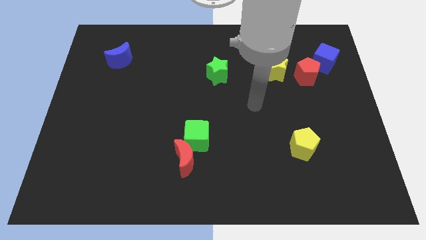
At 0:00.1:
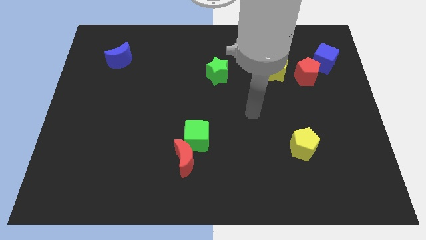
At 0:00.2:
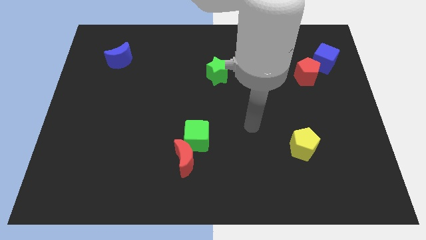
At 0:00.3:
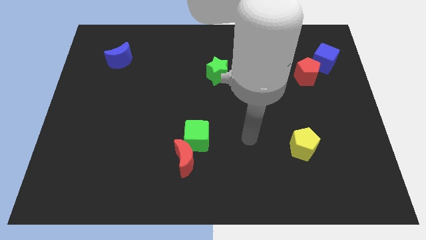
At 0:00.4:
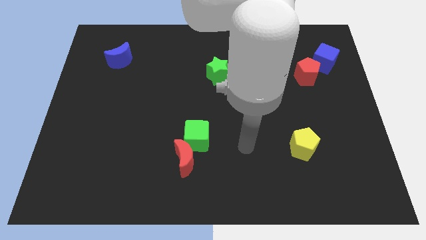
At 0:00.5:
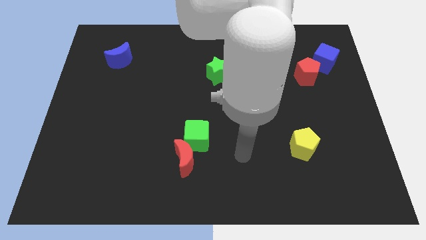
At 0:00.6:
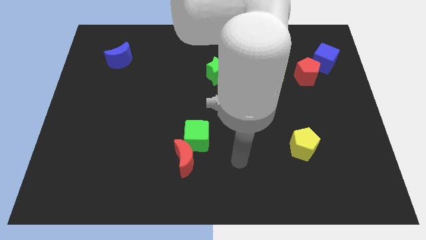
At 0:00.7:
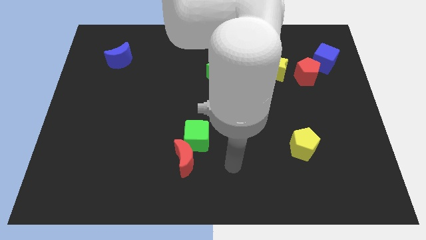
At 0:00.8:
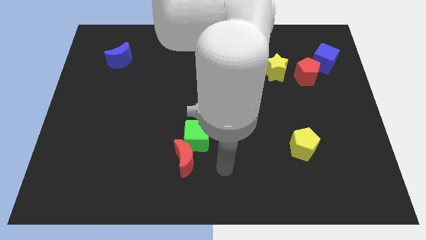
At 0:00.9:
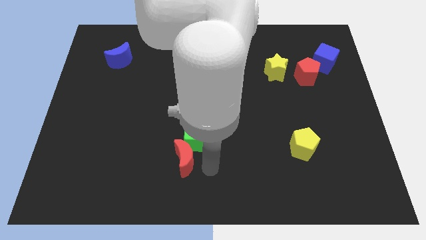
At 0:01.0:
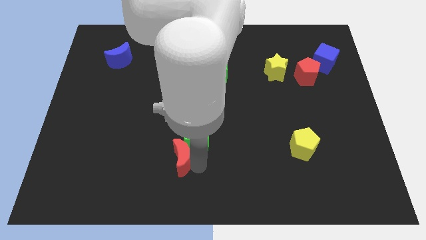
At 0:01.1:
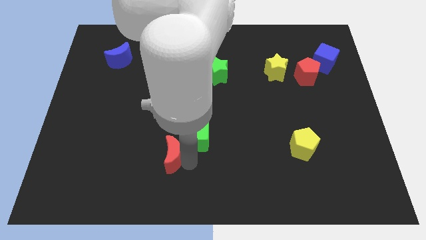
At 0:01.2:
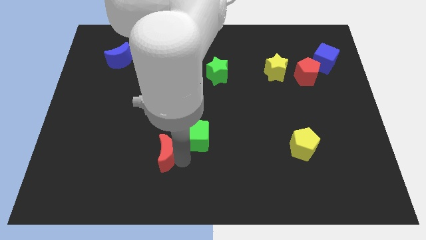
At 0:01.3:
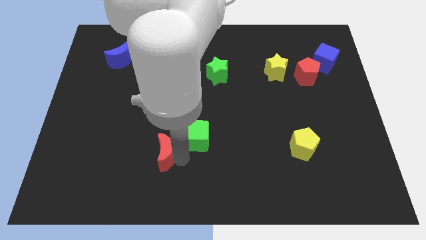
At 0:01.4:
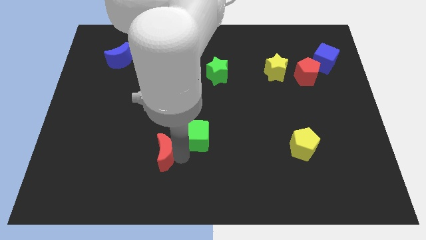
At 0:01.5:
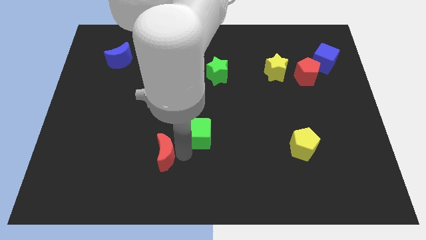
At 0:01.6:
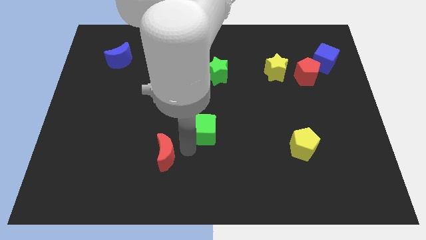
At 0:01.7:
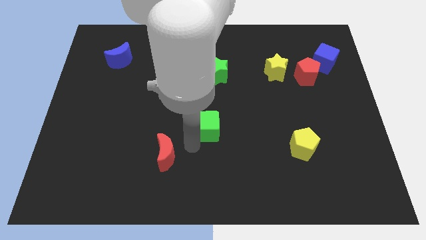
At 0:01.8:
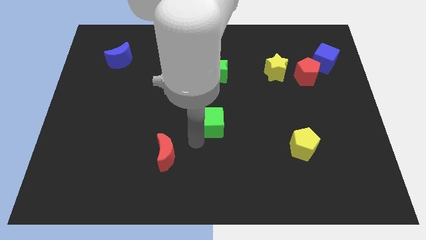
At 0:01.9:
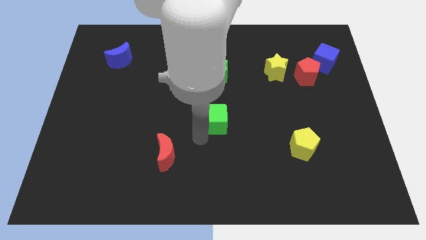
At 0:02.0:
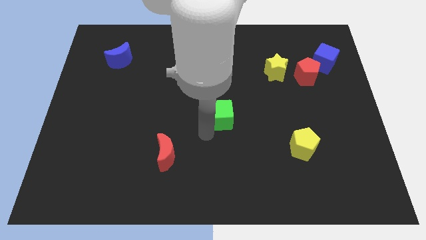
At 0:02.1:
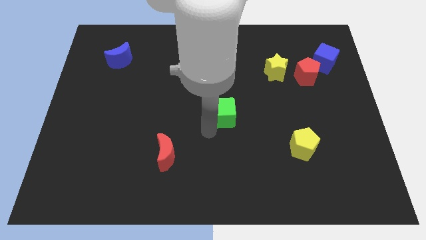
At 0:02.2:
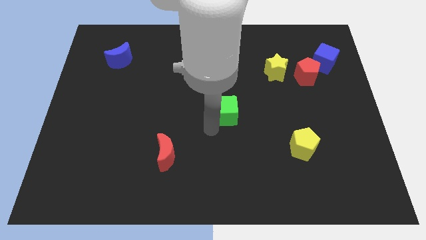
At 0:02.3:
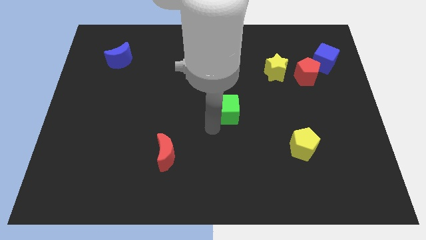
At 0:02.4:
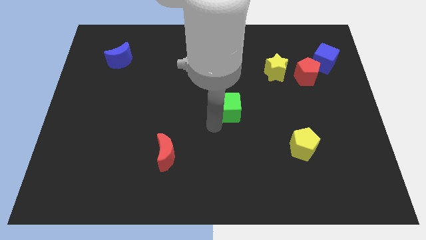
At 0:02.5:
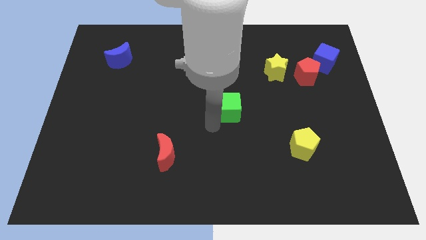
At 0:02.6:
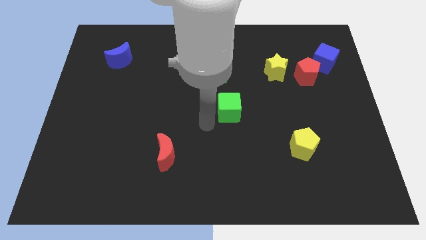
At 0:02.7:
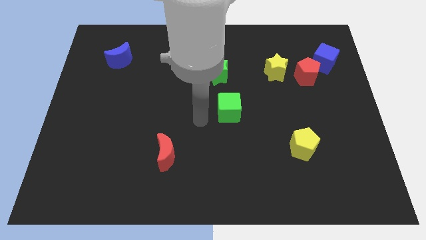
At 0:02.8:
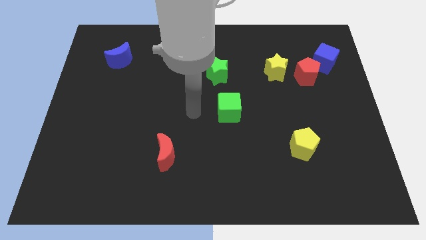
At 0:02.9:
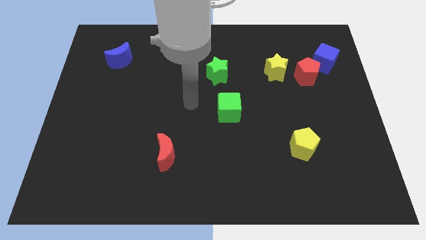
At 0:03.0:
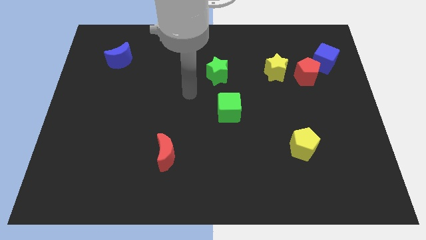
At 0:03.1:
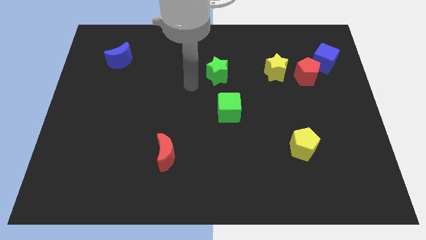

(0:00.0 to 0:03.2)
place green cube in center of board

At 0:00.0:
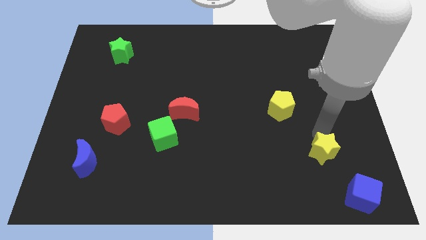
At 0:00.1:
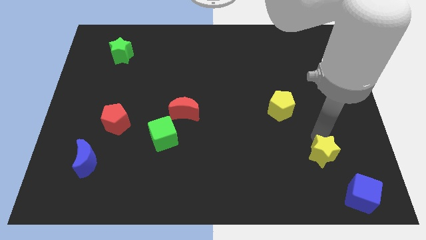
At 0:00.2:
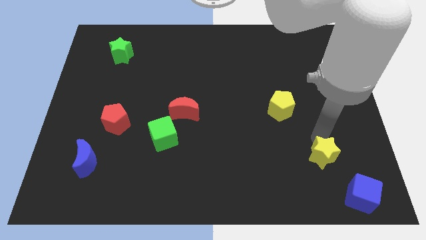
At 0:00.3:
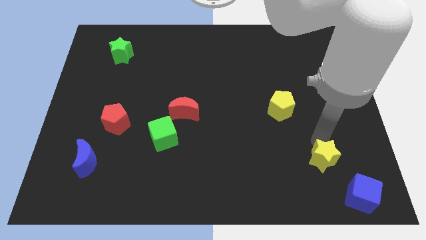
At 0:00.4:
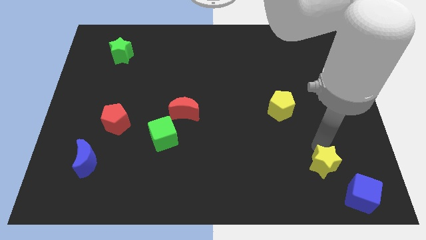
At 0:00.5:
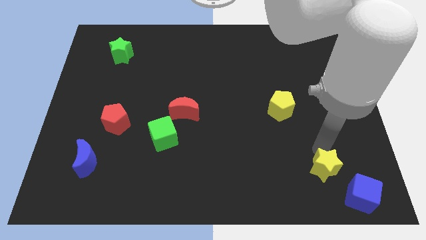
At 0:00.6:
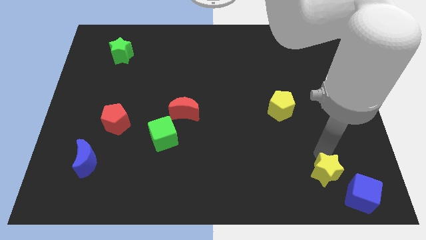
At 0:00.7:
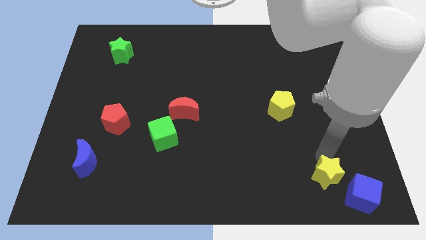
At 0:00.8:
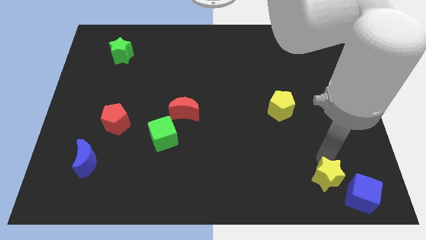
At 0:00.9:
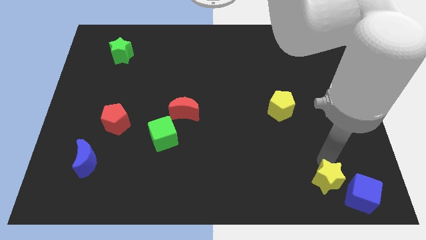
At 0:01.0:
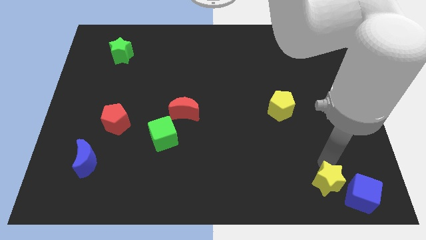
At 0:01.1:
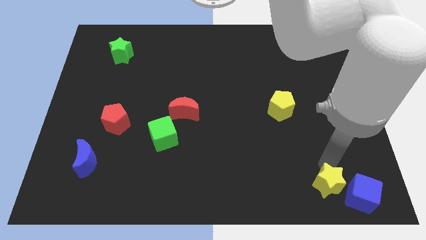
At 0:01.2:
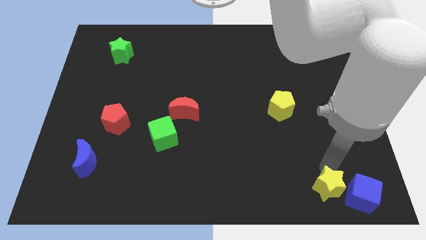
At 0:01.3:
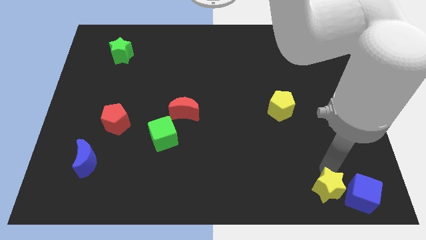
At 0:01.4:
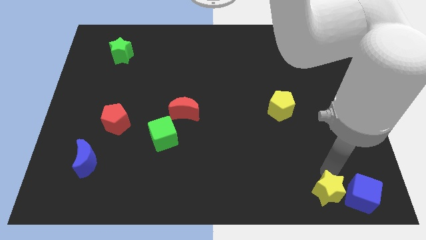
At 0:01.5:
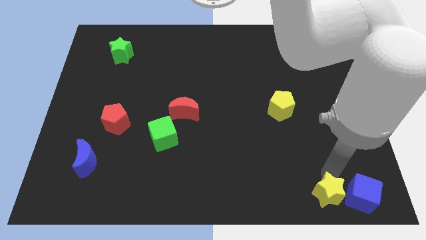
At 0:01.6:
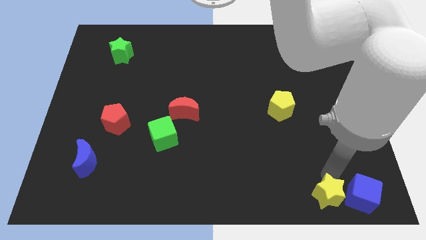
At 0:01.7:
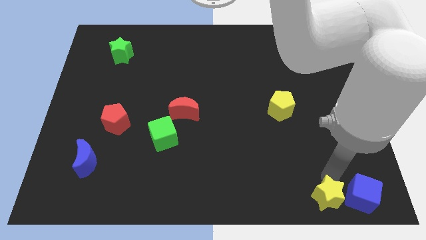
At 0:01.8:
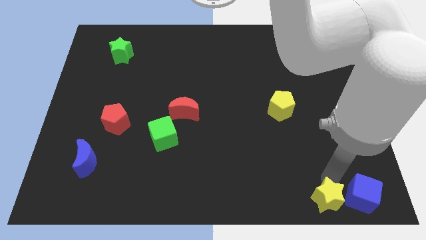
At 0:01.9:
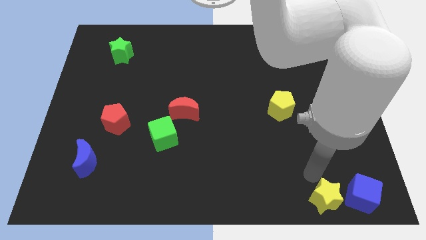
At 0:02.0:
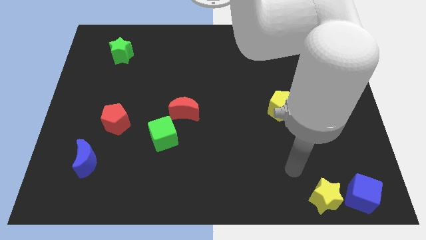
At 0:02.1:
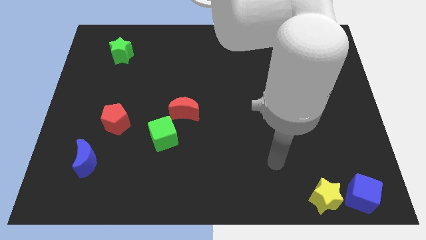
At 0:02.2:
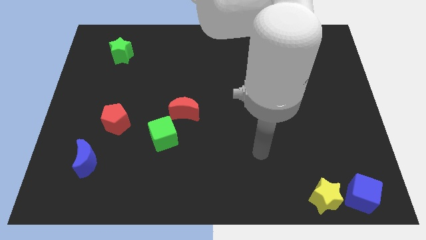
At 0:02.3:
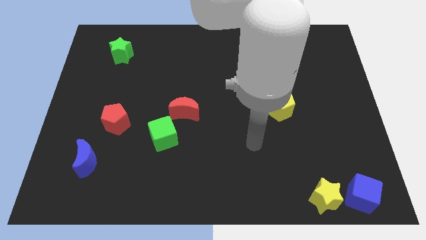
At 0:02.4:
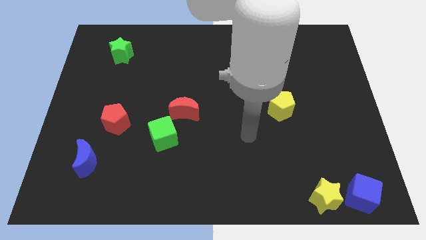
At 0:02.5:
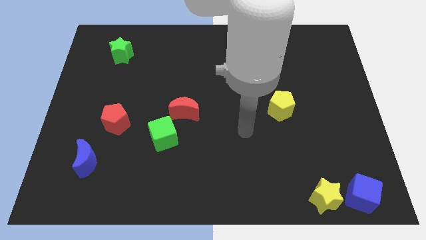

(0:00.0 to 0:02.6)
put the yellow star to the left of the blue cube

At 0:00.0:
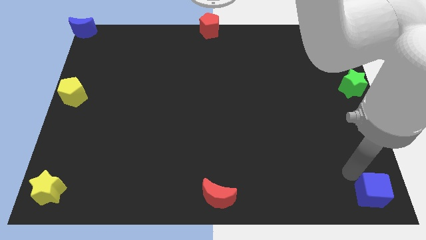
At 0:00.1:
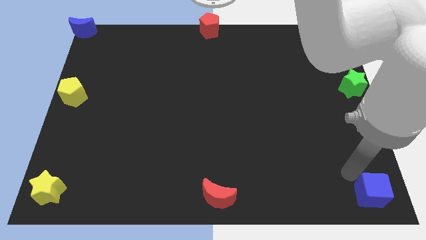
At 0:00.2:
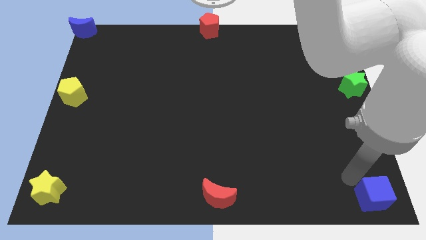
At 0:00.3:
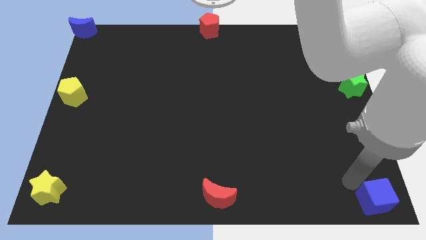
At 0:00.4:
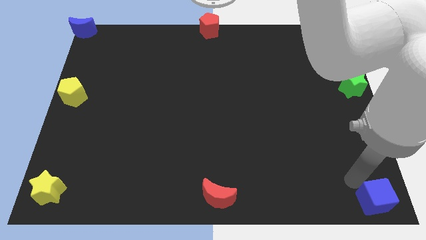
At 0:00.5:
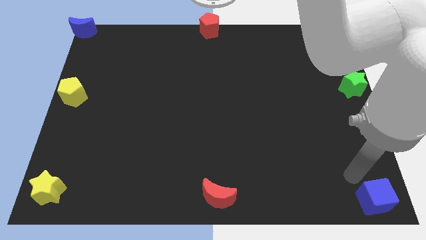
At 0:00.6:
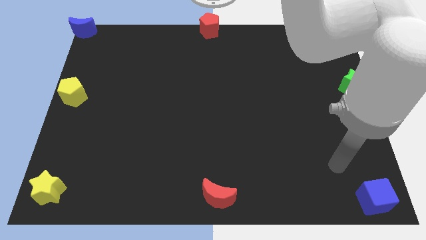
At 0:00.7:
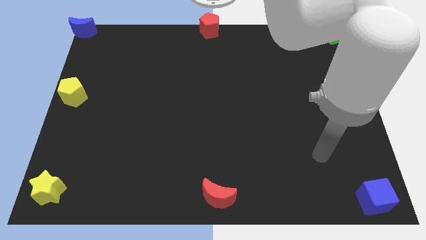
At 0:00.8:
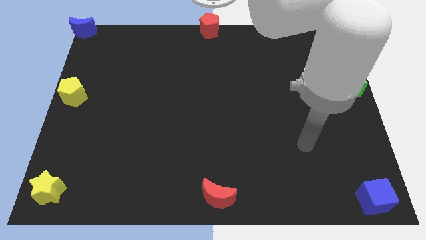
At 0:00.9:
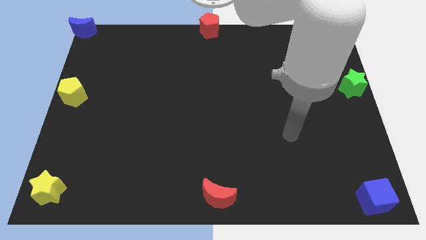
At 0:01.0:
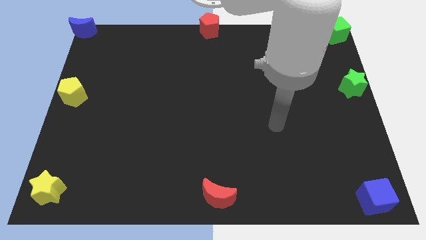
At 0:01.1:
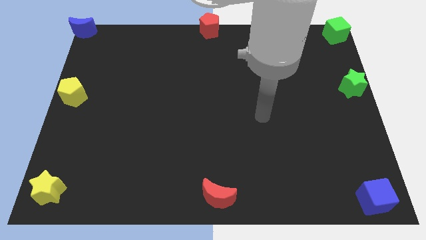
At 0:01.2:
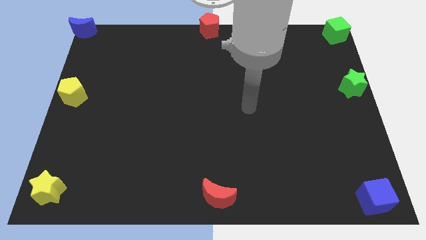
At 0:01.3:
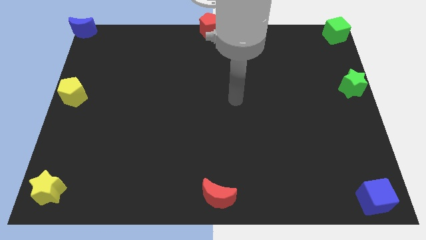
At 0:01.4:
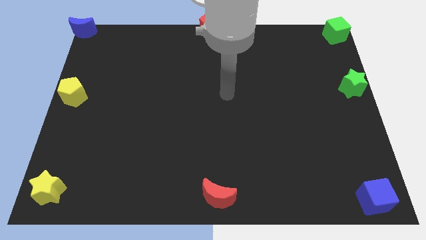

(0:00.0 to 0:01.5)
move the arm from bottom right corner to center of the board

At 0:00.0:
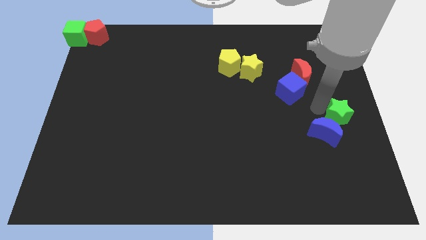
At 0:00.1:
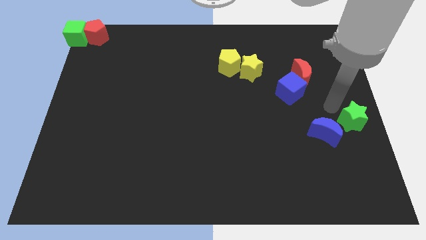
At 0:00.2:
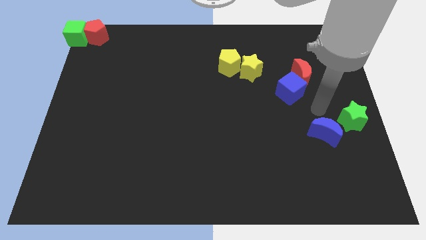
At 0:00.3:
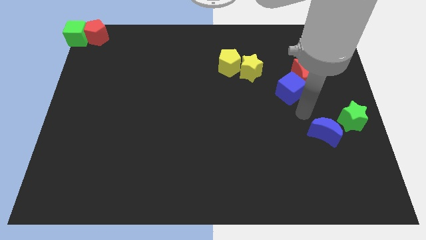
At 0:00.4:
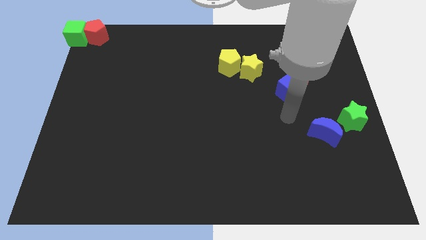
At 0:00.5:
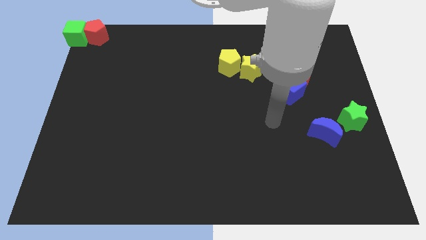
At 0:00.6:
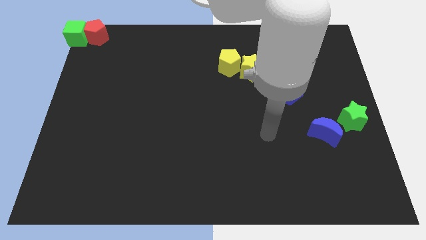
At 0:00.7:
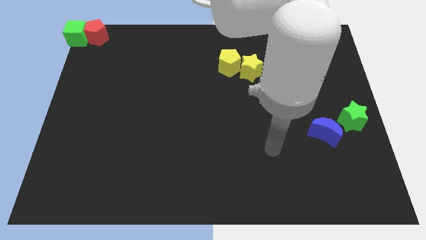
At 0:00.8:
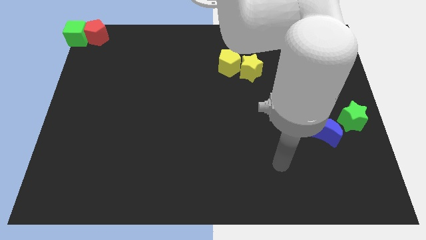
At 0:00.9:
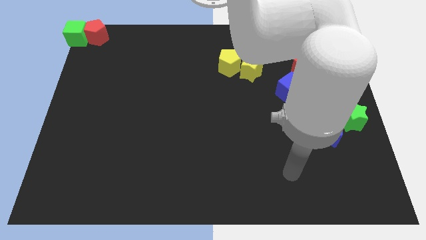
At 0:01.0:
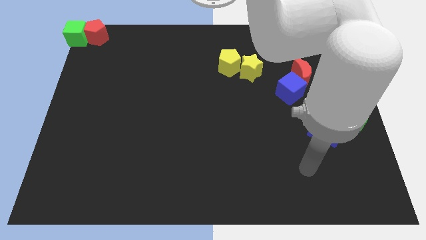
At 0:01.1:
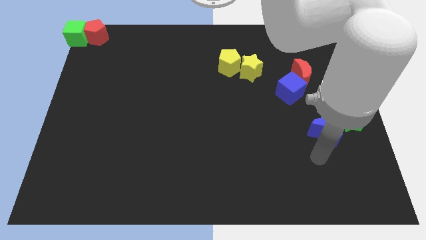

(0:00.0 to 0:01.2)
slightly push green star towards the right center of the board

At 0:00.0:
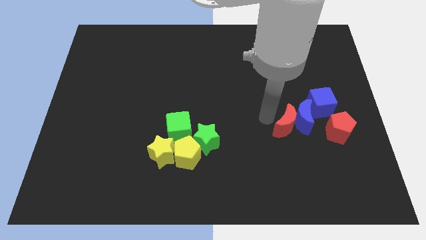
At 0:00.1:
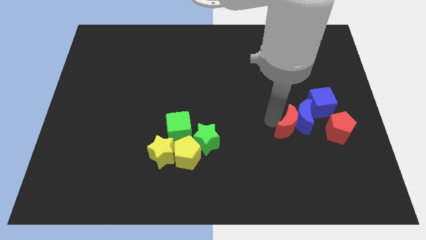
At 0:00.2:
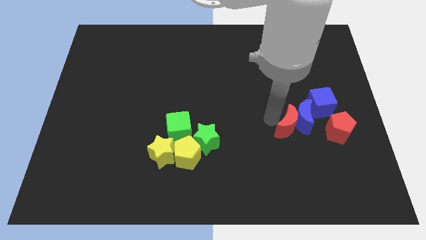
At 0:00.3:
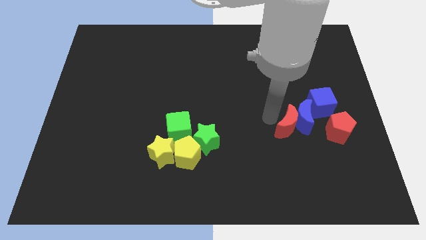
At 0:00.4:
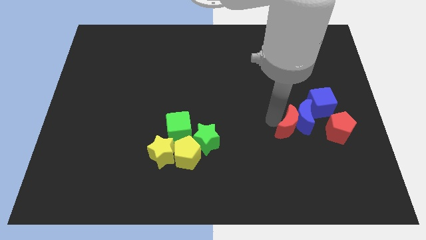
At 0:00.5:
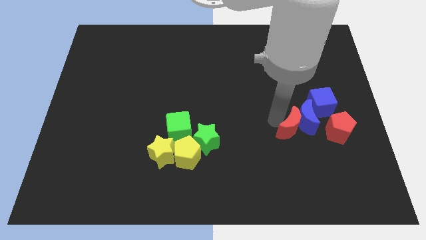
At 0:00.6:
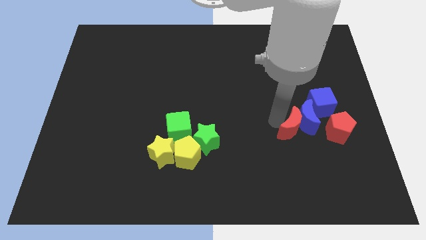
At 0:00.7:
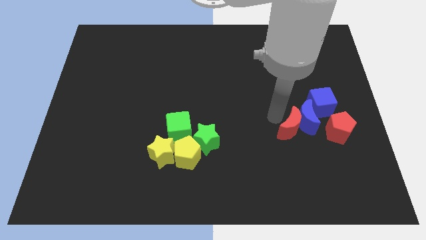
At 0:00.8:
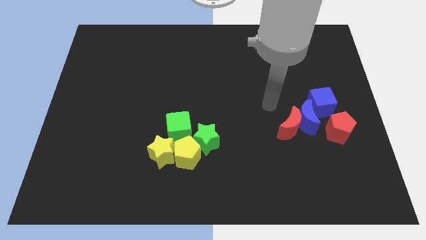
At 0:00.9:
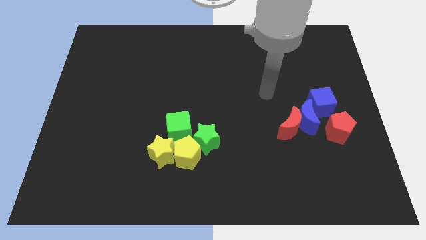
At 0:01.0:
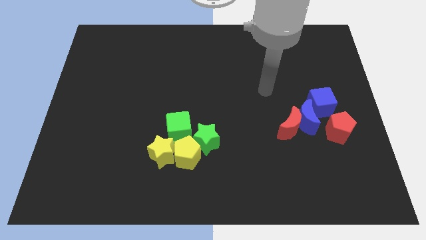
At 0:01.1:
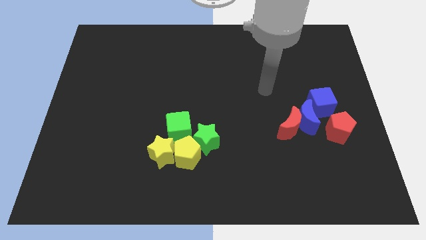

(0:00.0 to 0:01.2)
make the red crescent to touch the blue crescent
